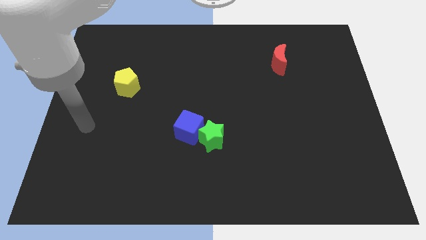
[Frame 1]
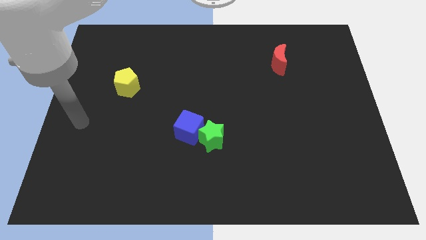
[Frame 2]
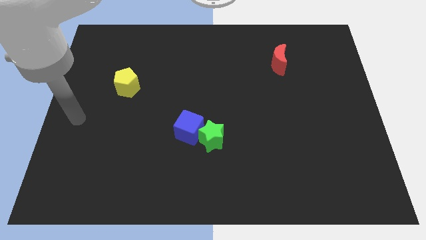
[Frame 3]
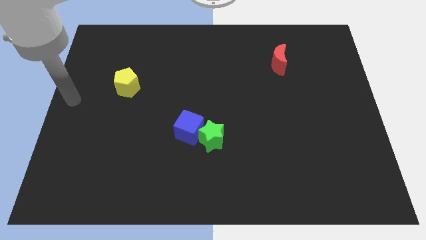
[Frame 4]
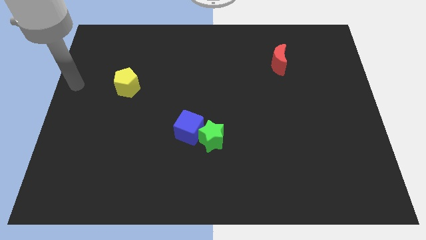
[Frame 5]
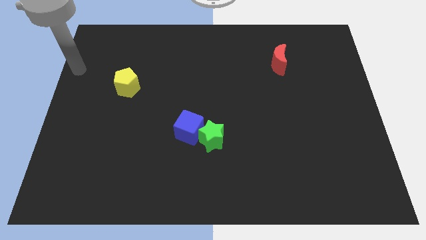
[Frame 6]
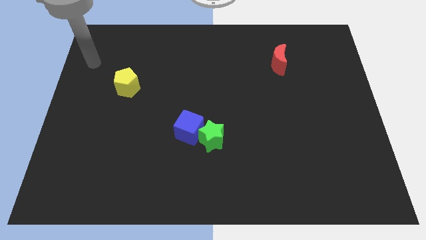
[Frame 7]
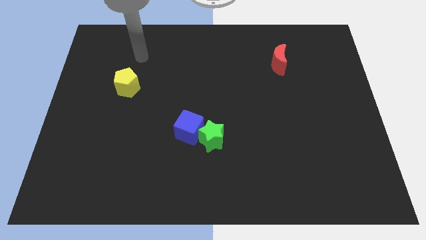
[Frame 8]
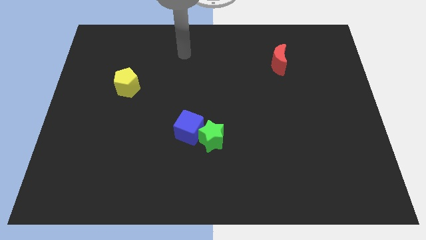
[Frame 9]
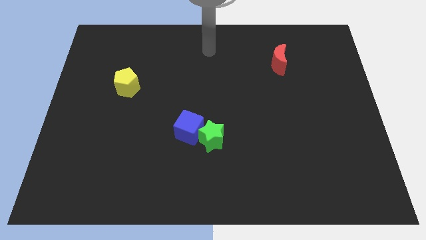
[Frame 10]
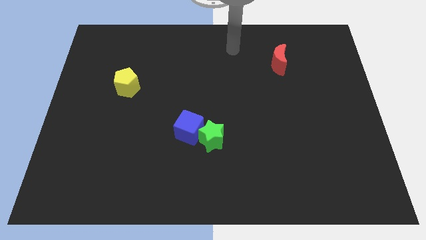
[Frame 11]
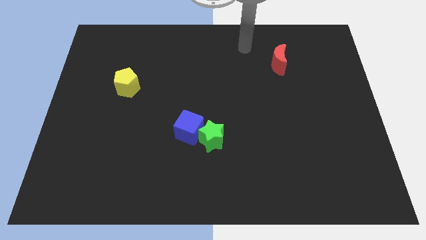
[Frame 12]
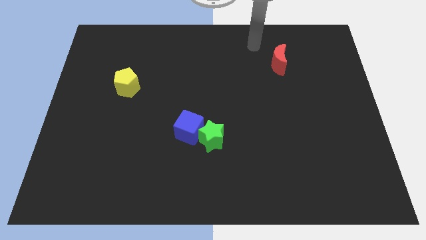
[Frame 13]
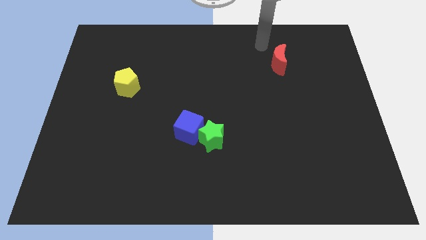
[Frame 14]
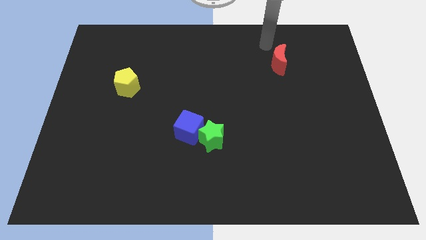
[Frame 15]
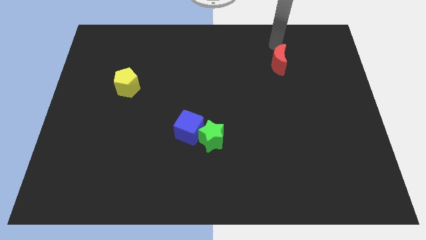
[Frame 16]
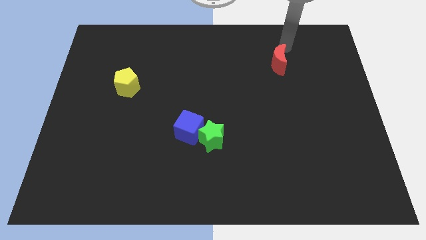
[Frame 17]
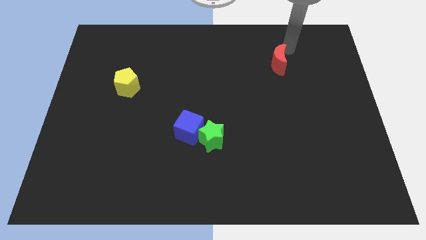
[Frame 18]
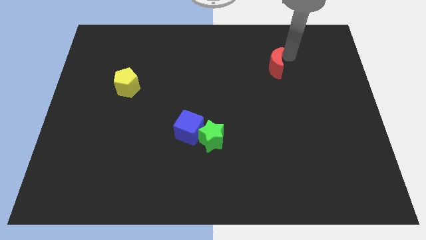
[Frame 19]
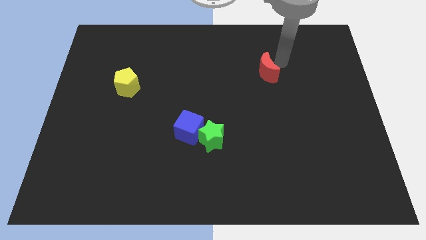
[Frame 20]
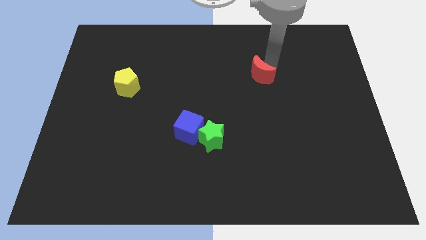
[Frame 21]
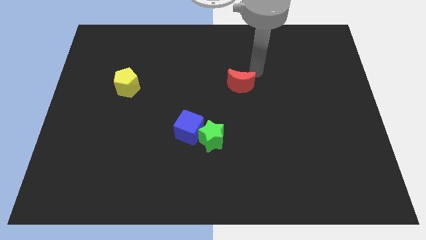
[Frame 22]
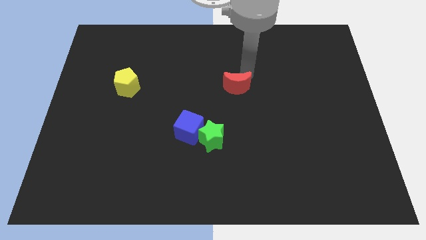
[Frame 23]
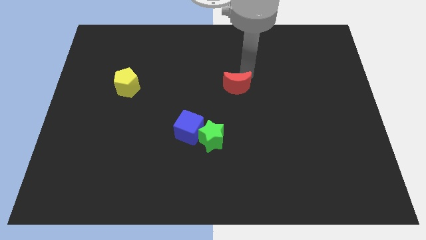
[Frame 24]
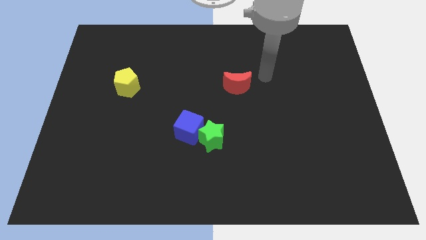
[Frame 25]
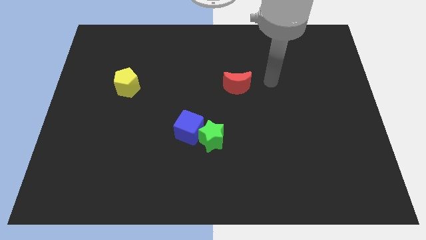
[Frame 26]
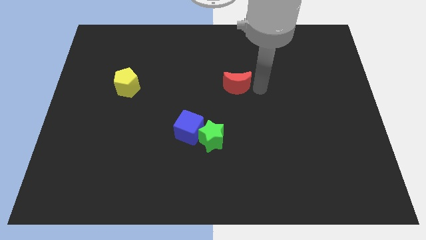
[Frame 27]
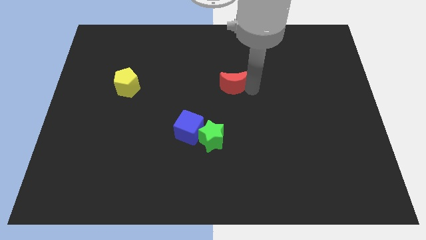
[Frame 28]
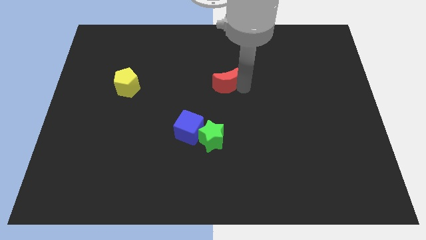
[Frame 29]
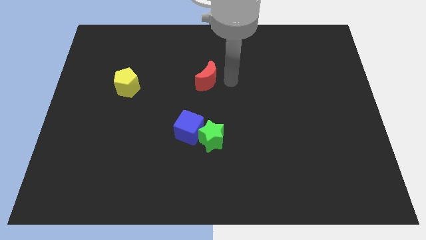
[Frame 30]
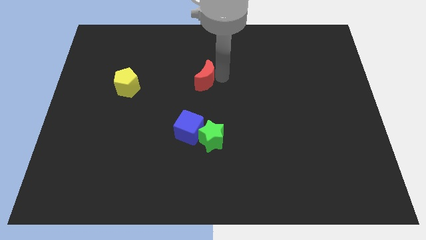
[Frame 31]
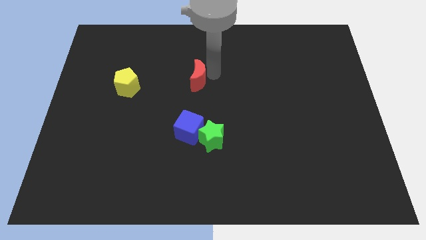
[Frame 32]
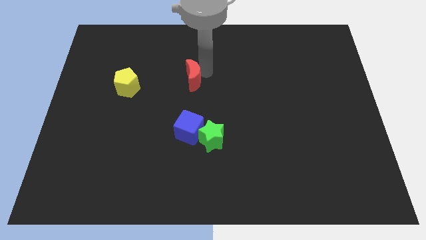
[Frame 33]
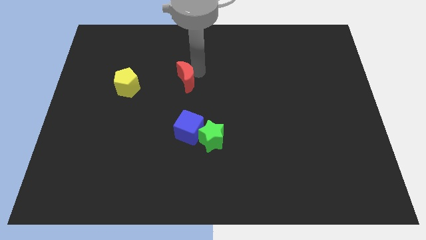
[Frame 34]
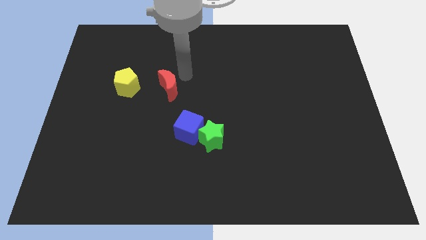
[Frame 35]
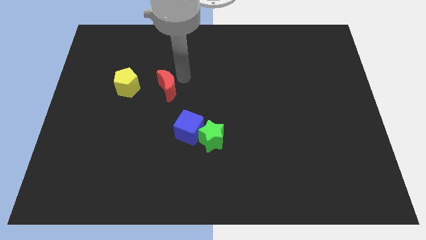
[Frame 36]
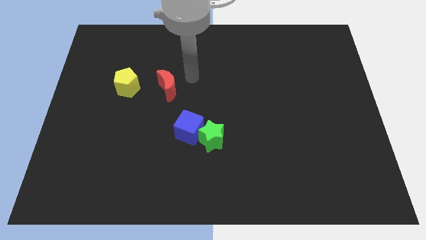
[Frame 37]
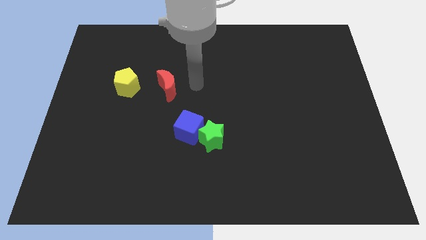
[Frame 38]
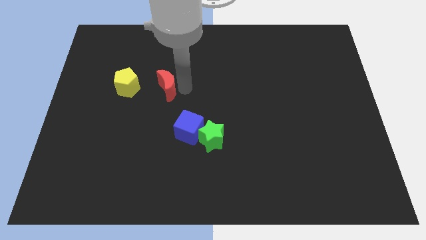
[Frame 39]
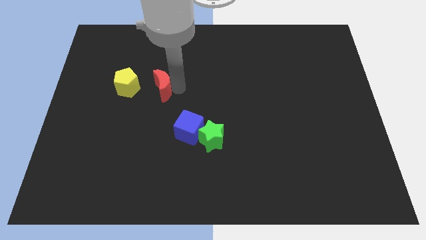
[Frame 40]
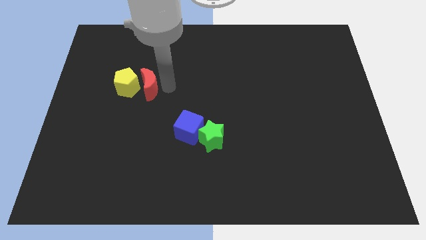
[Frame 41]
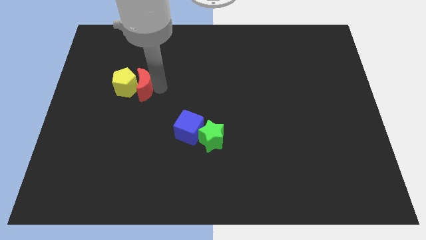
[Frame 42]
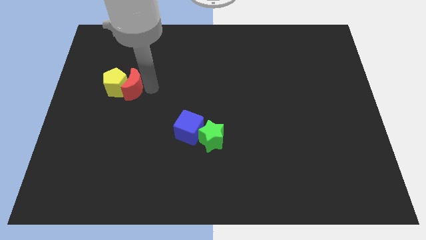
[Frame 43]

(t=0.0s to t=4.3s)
put the red moon to the yellow pentagon

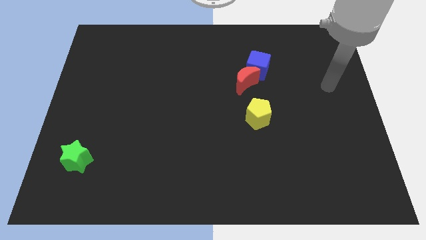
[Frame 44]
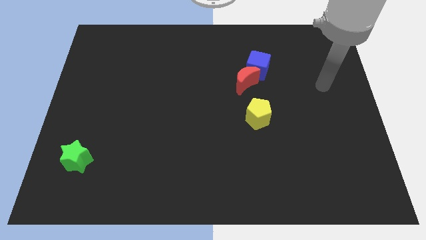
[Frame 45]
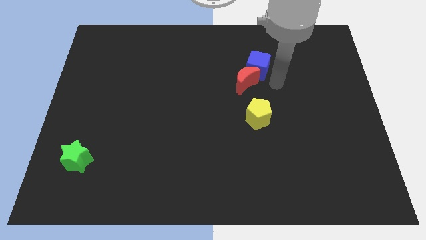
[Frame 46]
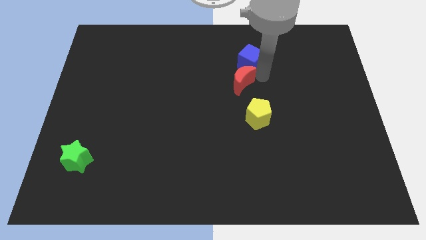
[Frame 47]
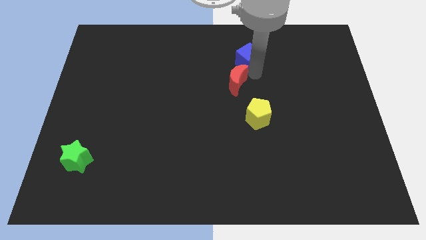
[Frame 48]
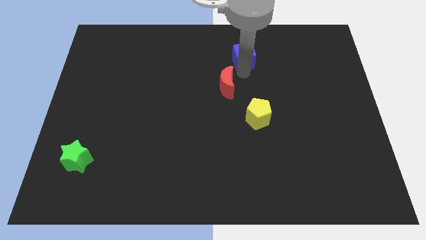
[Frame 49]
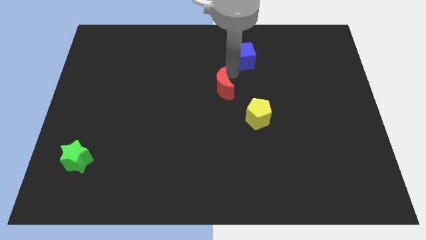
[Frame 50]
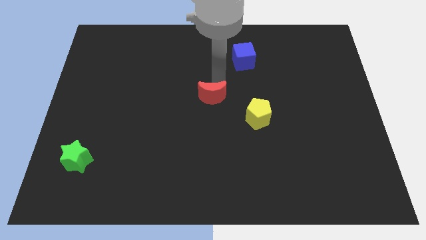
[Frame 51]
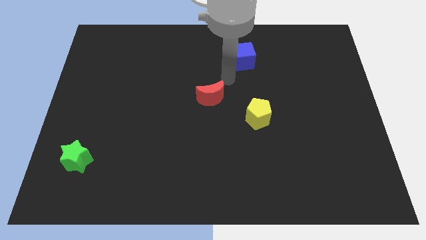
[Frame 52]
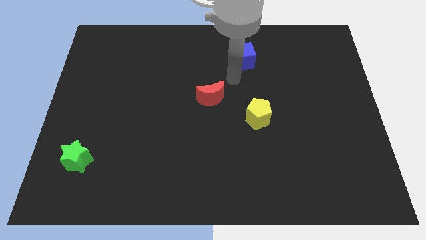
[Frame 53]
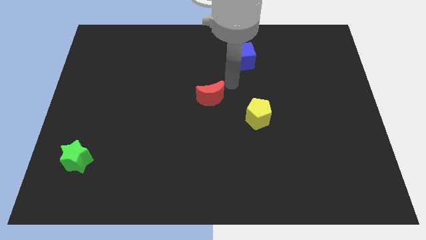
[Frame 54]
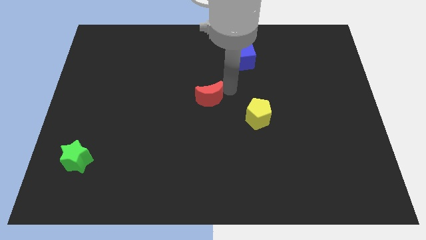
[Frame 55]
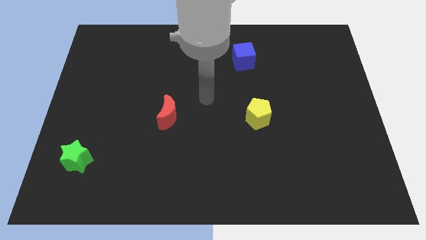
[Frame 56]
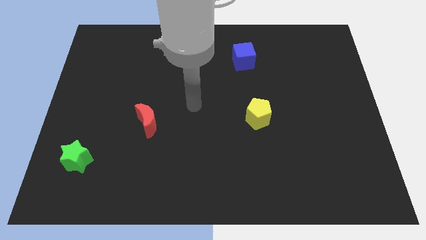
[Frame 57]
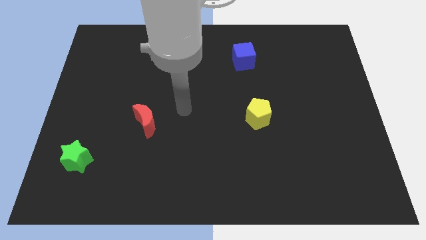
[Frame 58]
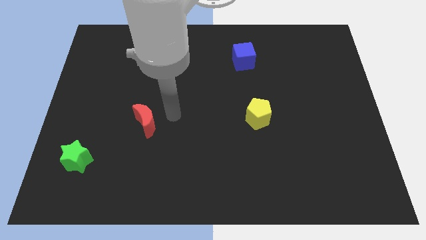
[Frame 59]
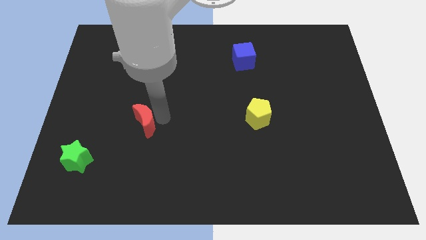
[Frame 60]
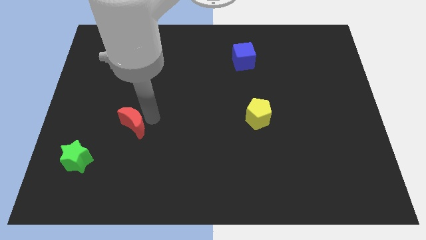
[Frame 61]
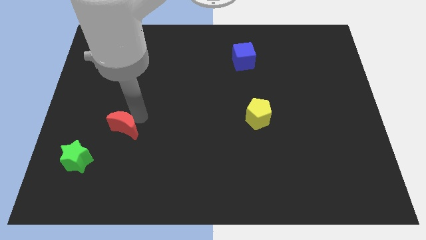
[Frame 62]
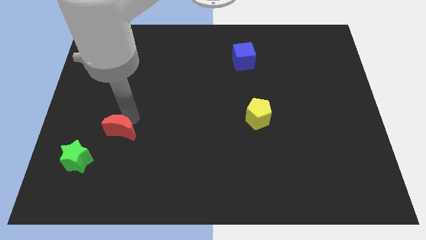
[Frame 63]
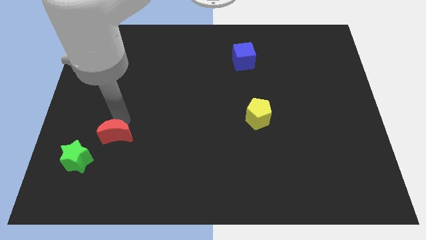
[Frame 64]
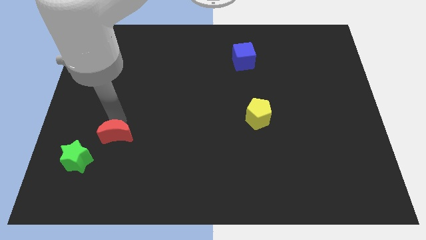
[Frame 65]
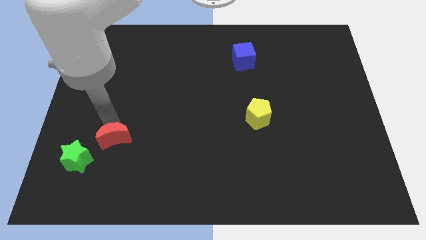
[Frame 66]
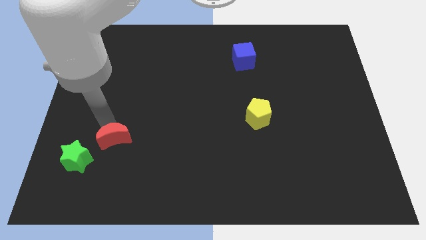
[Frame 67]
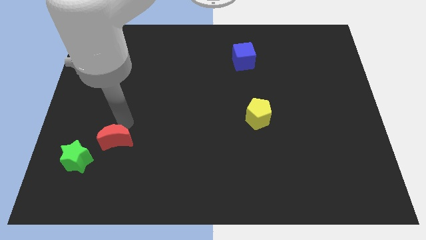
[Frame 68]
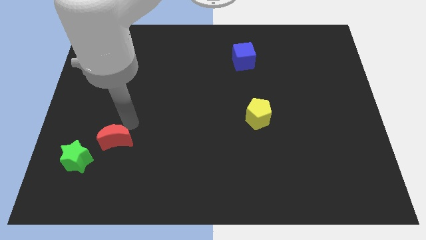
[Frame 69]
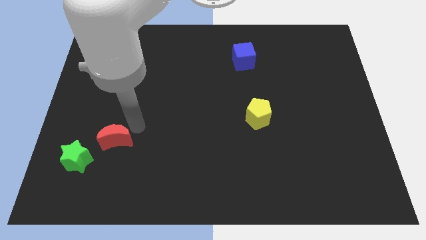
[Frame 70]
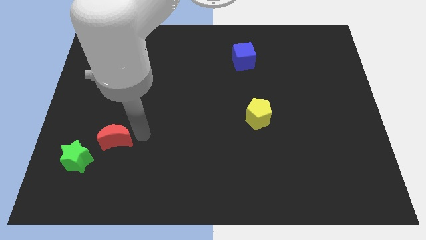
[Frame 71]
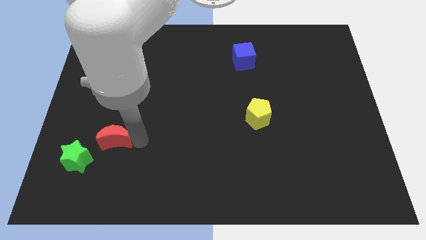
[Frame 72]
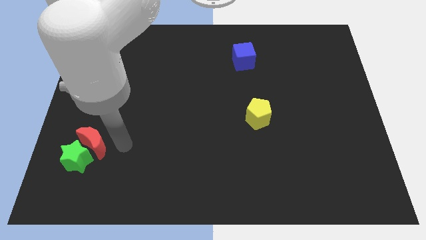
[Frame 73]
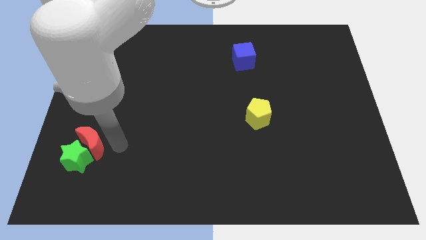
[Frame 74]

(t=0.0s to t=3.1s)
move the red moon next to the star

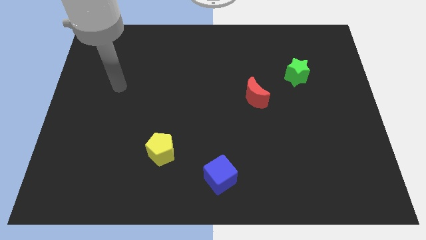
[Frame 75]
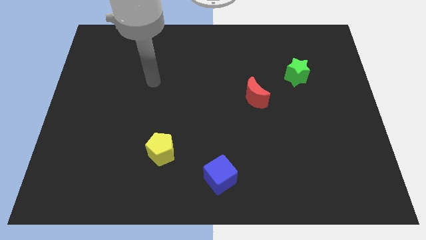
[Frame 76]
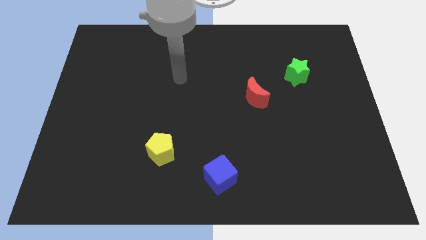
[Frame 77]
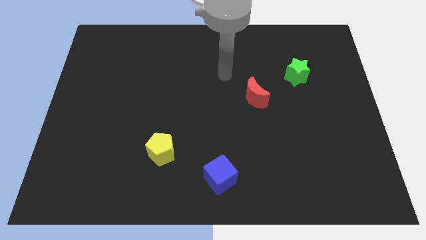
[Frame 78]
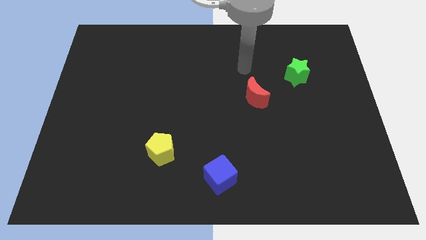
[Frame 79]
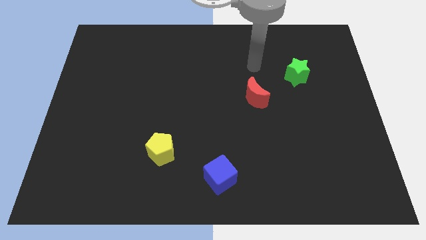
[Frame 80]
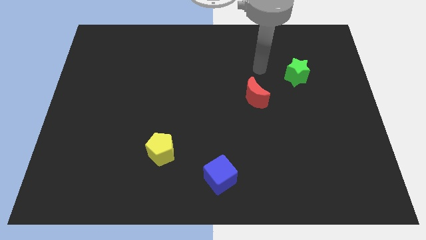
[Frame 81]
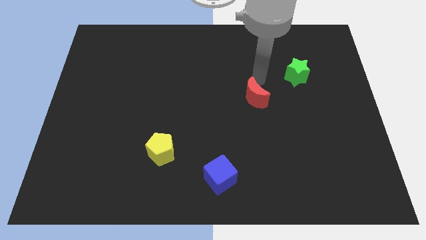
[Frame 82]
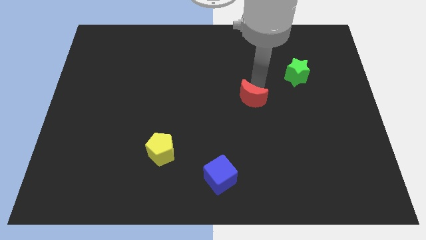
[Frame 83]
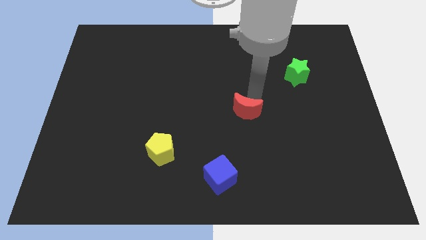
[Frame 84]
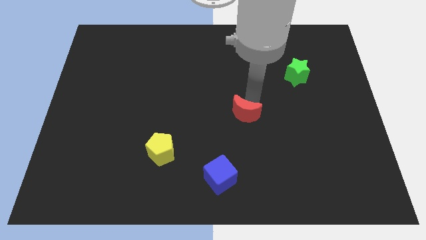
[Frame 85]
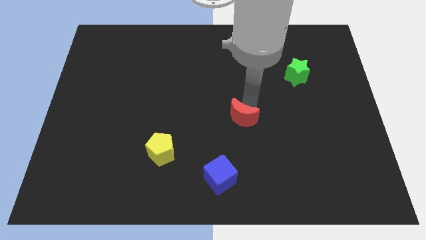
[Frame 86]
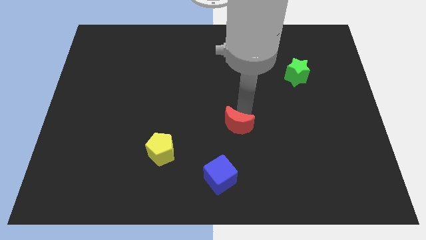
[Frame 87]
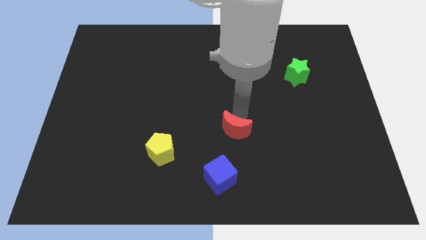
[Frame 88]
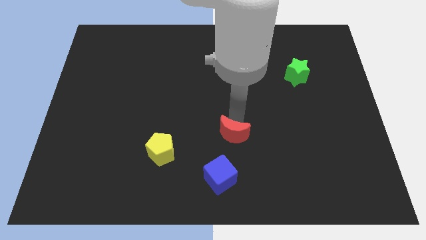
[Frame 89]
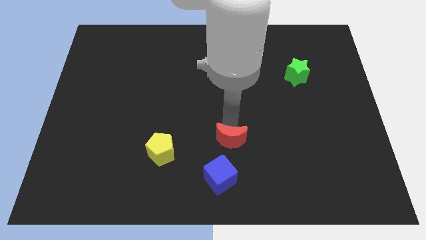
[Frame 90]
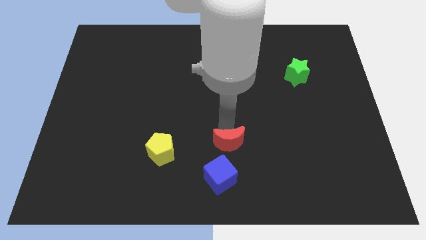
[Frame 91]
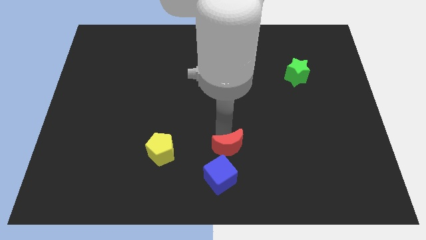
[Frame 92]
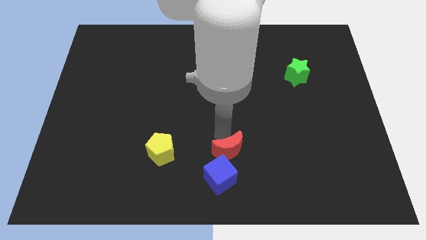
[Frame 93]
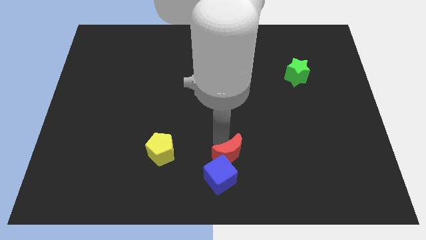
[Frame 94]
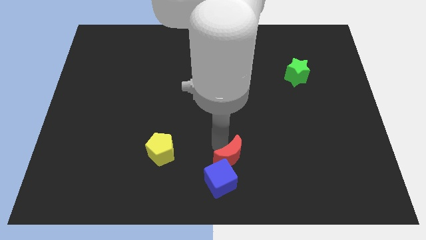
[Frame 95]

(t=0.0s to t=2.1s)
put the moon to the blue cube
